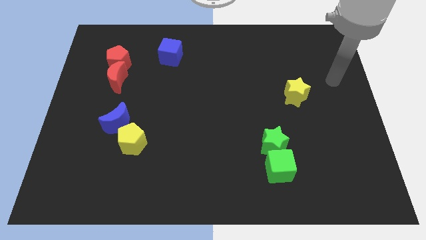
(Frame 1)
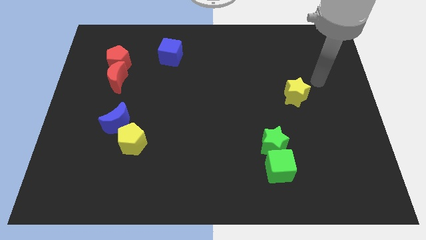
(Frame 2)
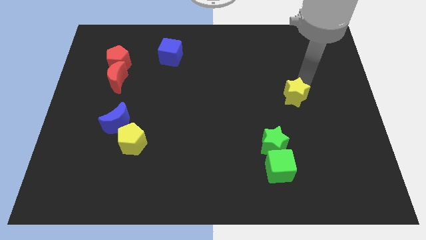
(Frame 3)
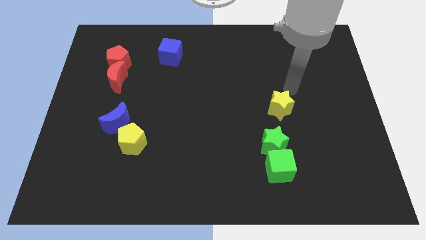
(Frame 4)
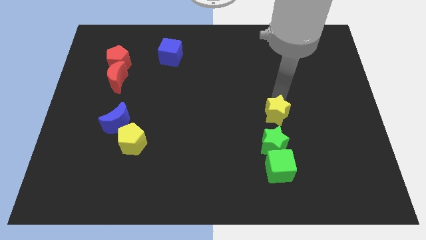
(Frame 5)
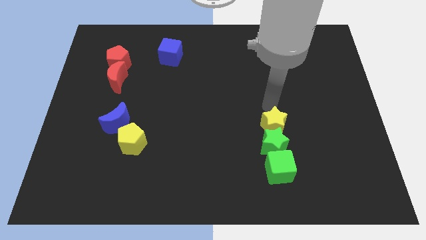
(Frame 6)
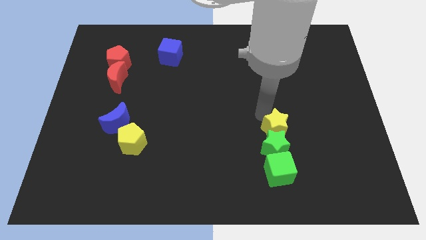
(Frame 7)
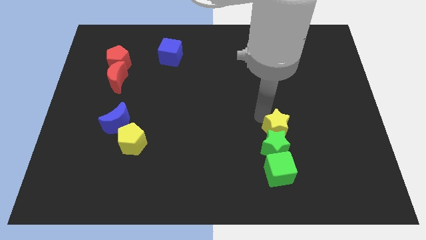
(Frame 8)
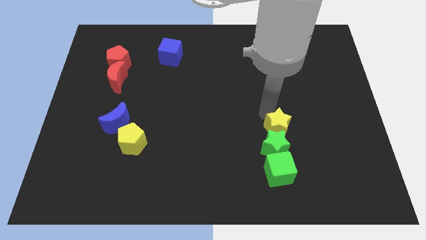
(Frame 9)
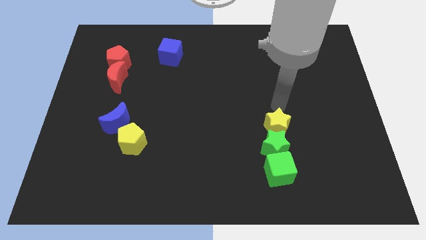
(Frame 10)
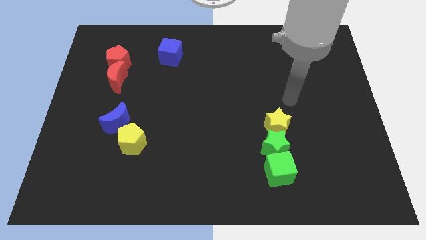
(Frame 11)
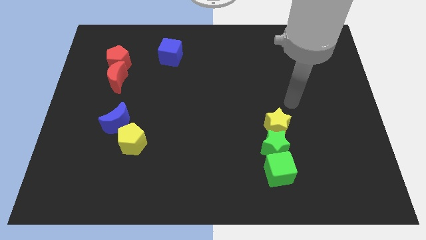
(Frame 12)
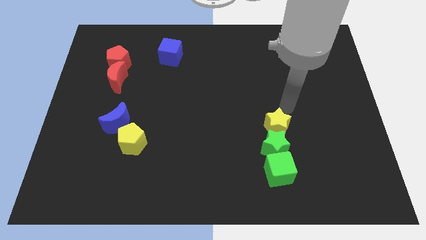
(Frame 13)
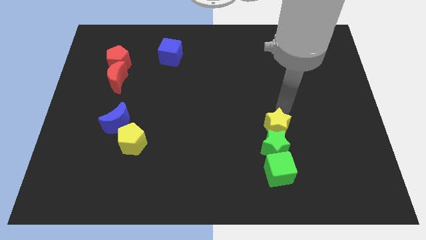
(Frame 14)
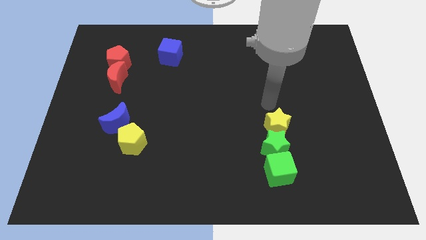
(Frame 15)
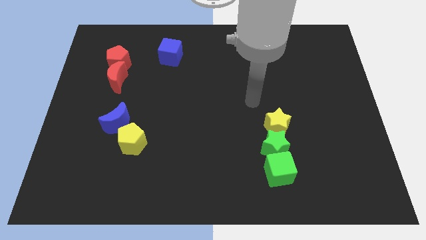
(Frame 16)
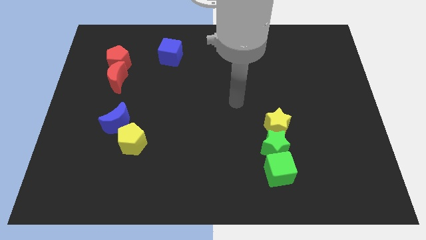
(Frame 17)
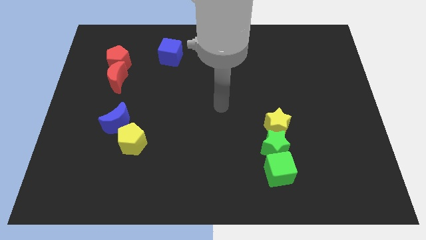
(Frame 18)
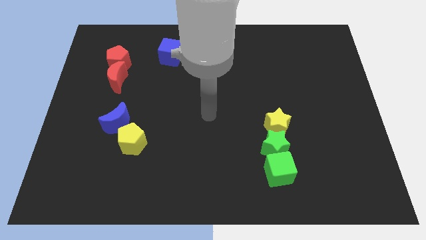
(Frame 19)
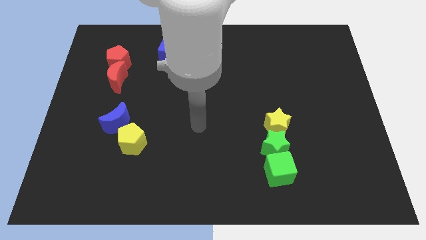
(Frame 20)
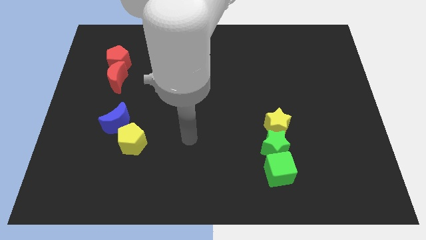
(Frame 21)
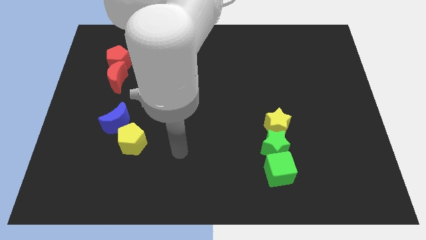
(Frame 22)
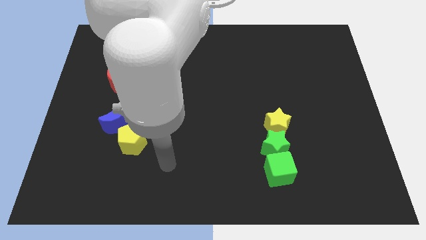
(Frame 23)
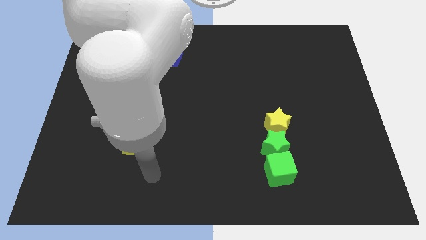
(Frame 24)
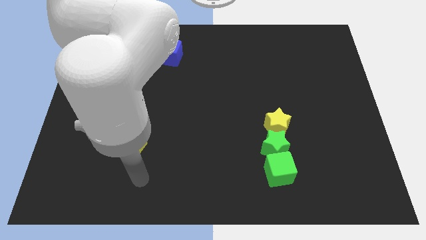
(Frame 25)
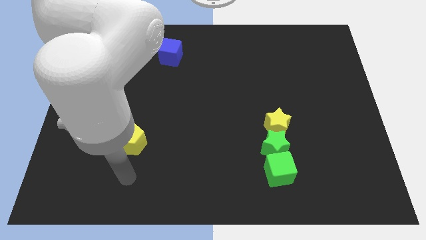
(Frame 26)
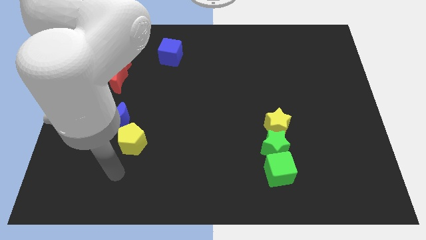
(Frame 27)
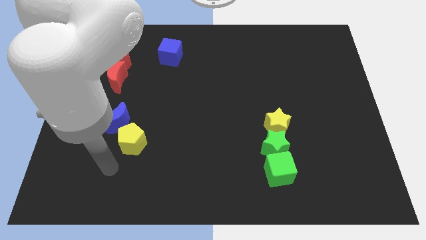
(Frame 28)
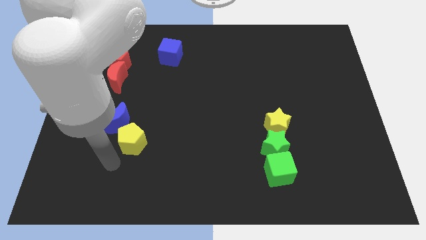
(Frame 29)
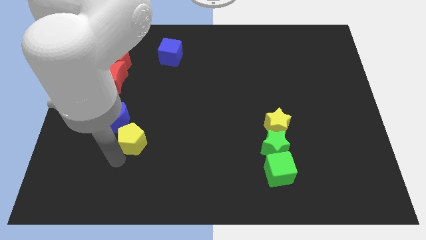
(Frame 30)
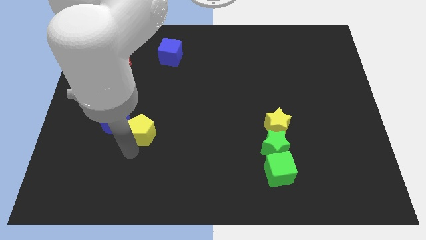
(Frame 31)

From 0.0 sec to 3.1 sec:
place the arm near the yellow pentagon

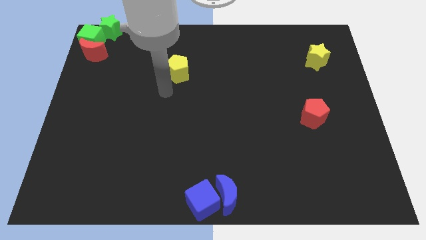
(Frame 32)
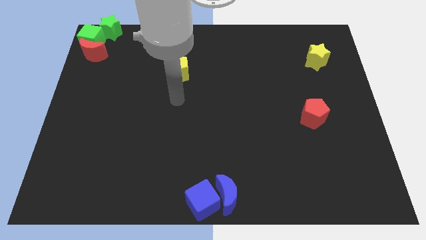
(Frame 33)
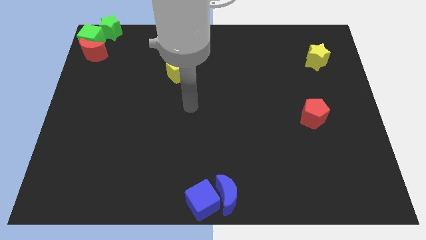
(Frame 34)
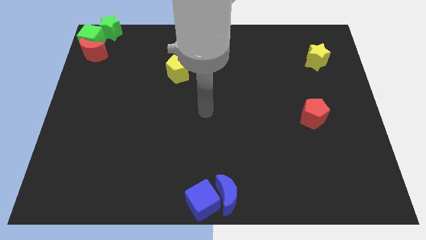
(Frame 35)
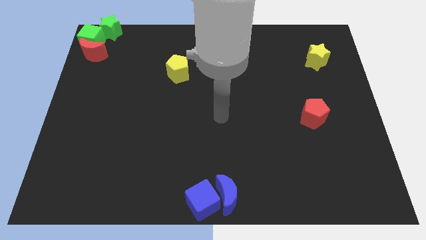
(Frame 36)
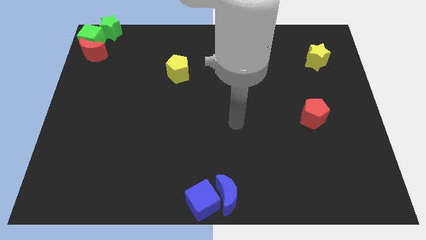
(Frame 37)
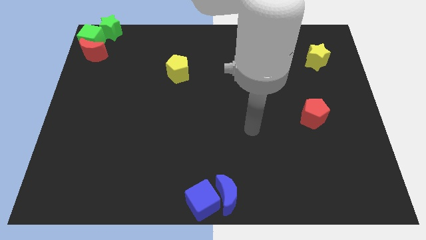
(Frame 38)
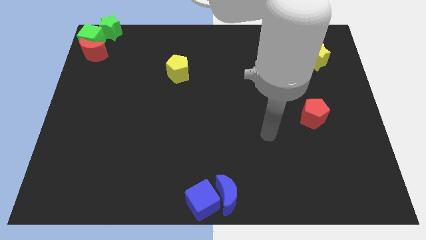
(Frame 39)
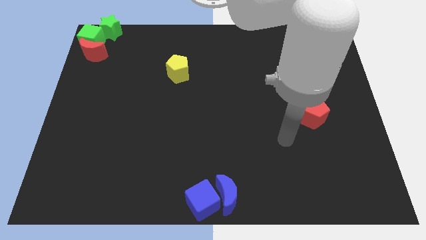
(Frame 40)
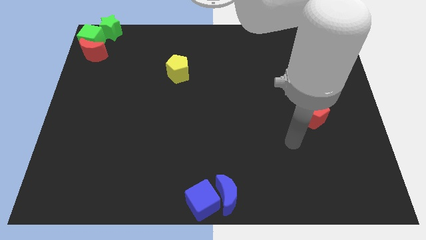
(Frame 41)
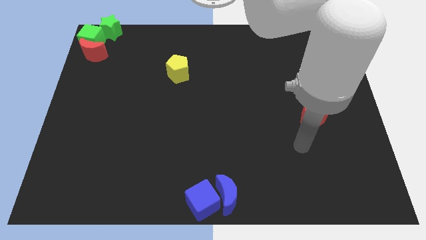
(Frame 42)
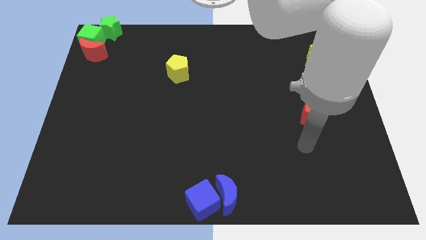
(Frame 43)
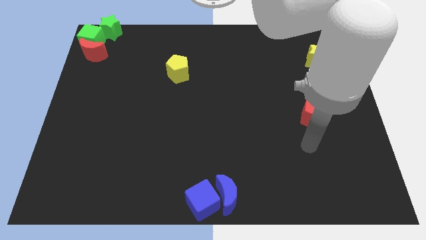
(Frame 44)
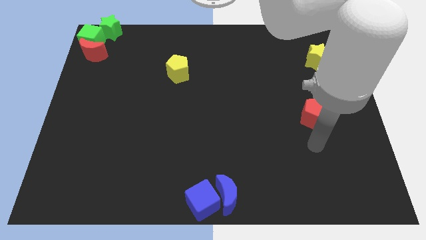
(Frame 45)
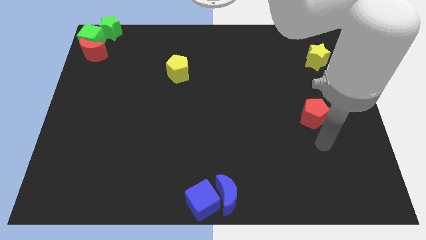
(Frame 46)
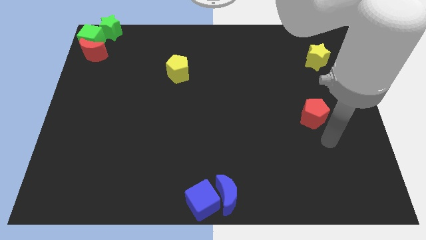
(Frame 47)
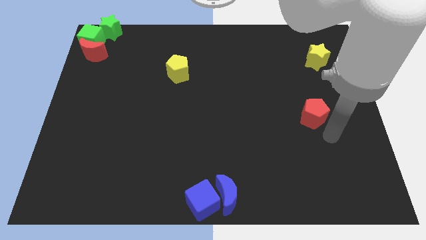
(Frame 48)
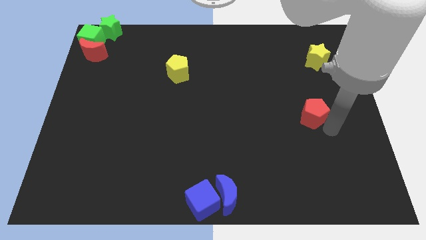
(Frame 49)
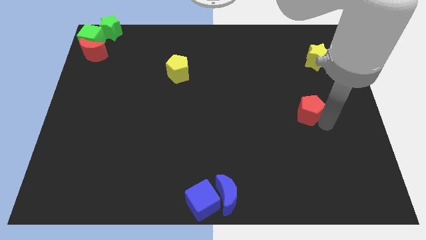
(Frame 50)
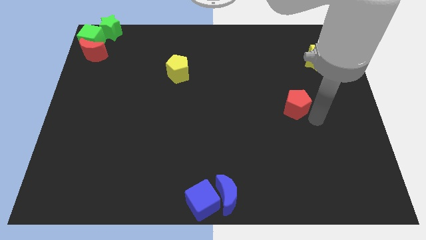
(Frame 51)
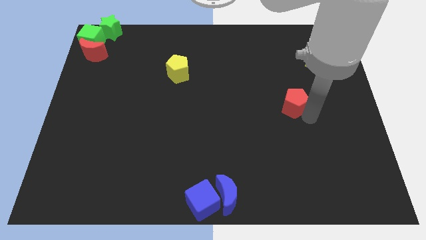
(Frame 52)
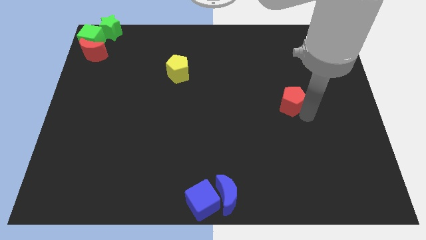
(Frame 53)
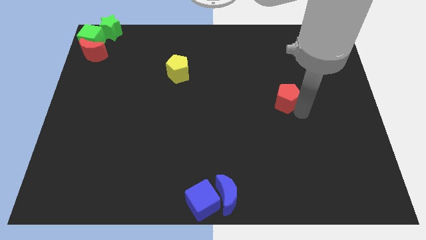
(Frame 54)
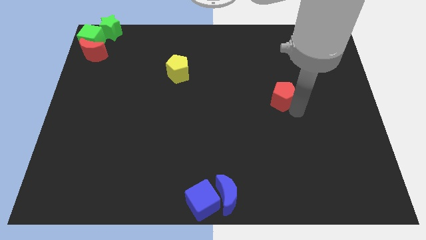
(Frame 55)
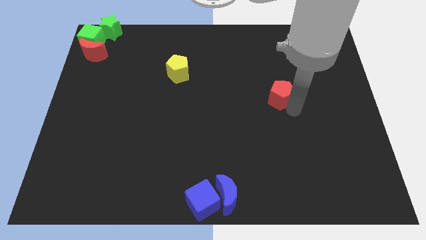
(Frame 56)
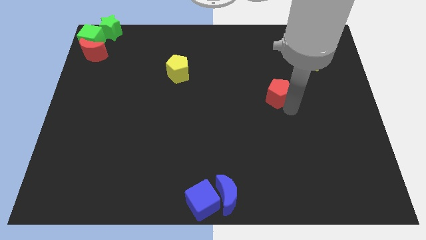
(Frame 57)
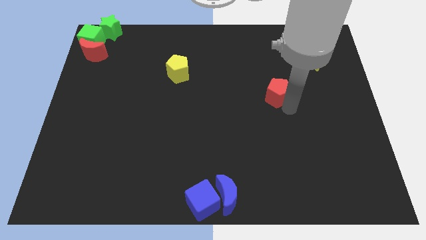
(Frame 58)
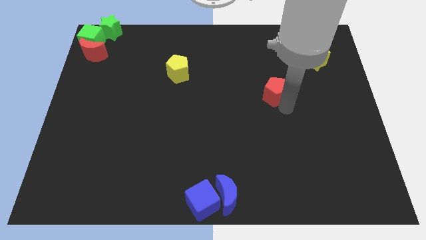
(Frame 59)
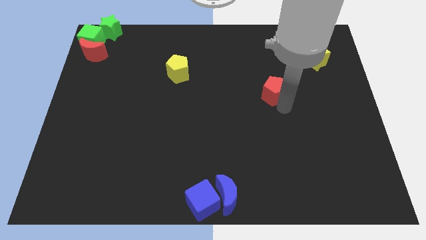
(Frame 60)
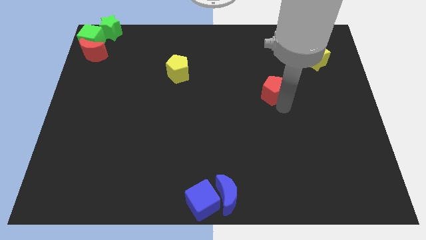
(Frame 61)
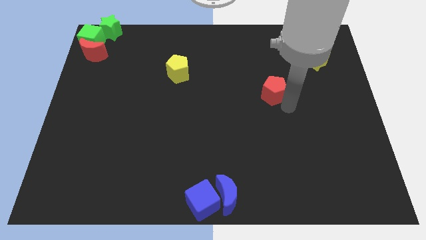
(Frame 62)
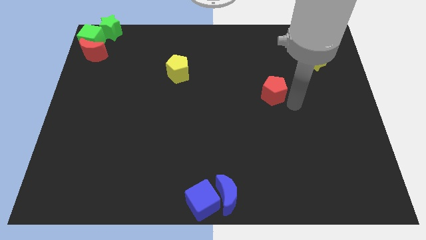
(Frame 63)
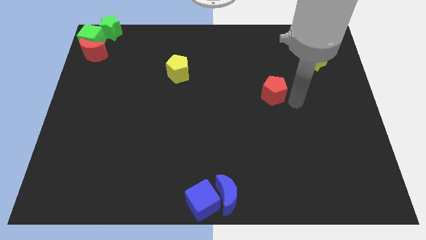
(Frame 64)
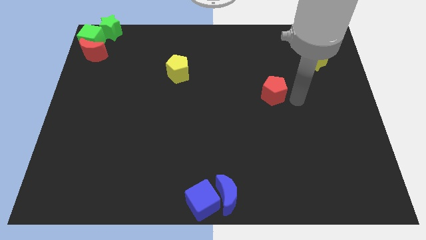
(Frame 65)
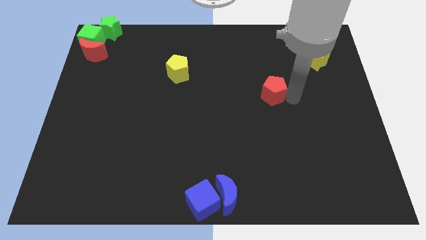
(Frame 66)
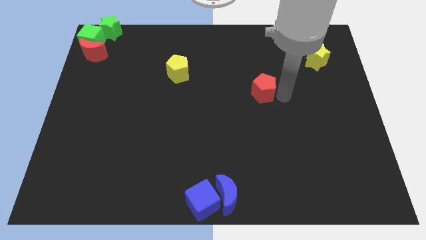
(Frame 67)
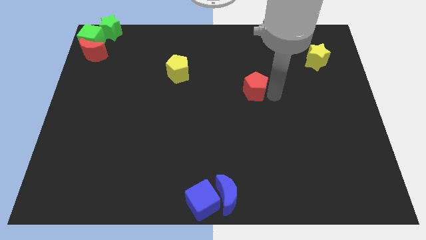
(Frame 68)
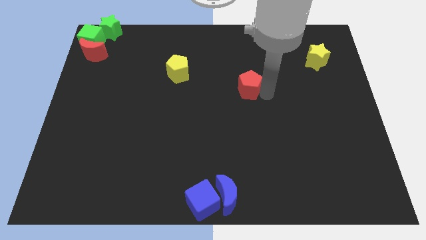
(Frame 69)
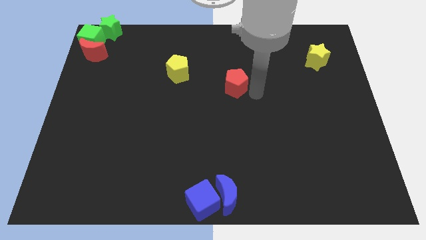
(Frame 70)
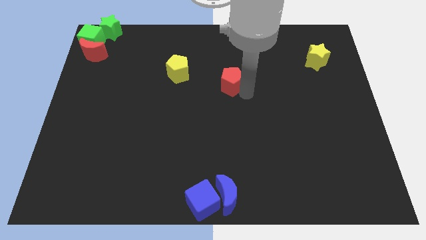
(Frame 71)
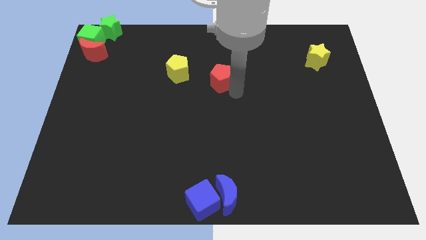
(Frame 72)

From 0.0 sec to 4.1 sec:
move red pentagon towards the right of yellow pentagon

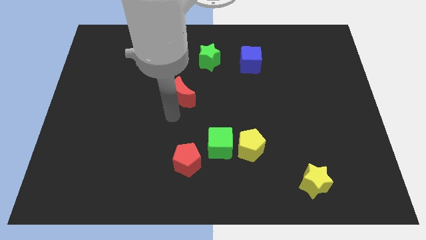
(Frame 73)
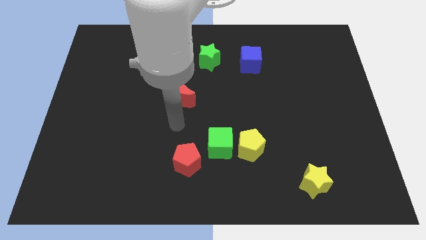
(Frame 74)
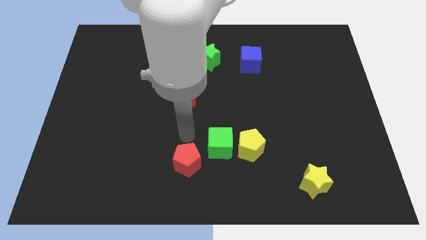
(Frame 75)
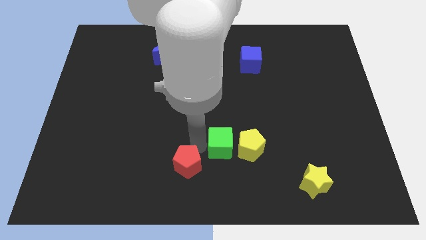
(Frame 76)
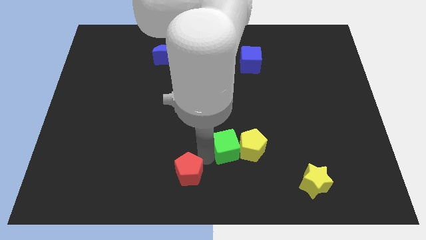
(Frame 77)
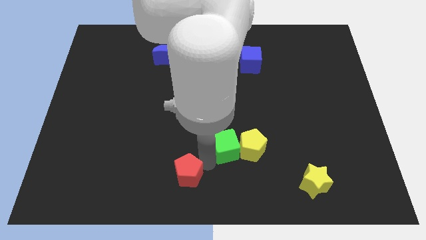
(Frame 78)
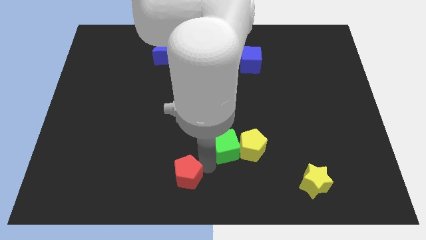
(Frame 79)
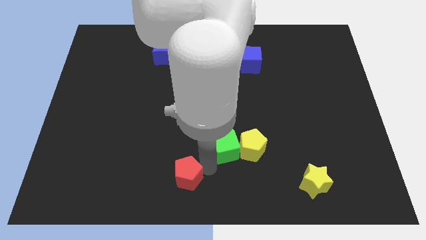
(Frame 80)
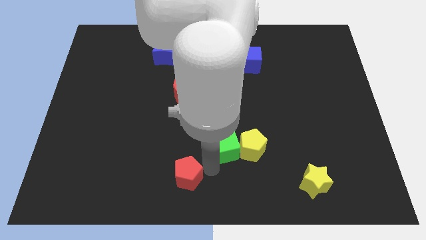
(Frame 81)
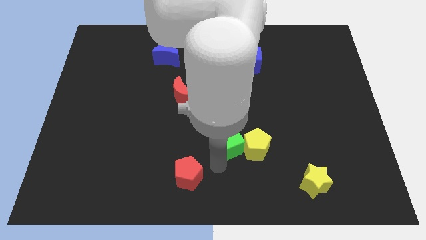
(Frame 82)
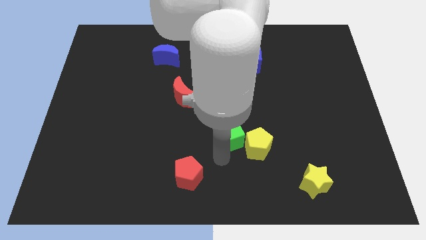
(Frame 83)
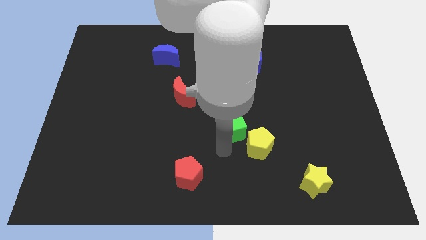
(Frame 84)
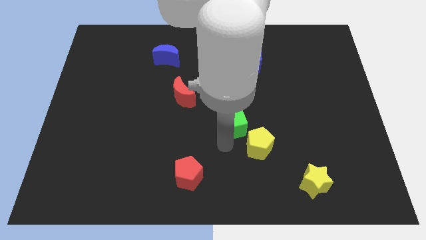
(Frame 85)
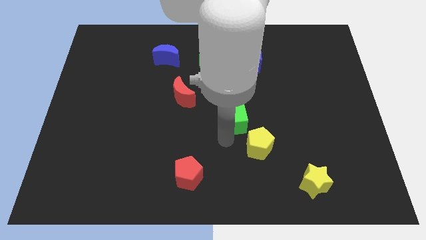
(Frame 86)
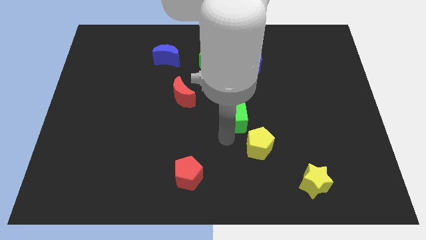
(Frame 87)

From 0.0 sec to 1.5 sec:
separate red pentagon and green cube

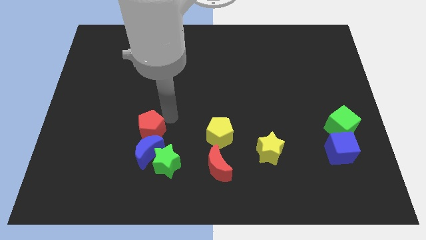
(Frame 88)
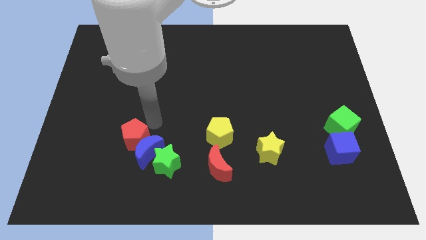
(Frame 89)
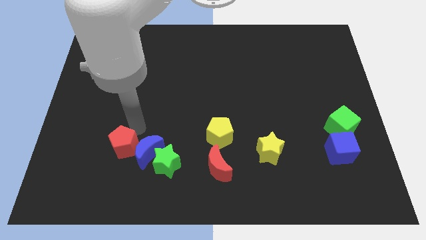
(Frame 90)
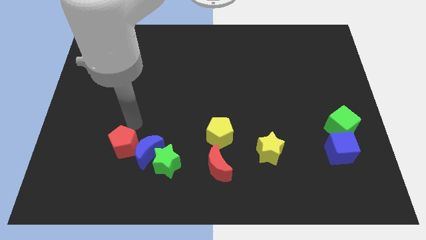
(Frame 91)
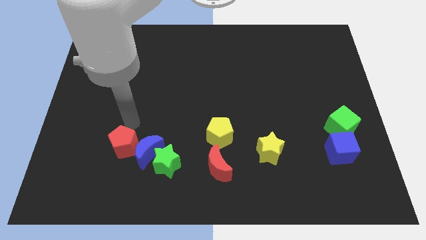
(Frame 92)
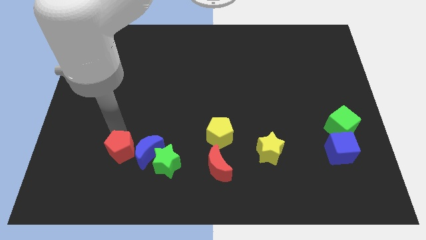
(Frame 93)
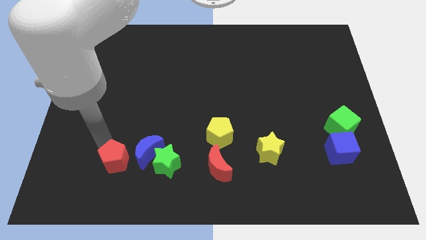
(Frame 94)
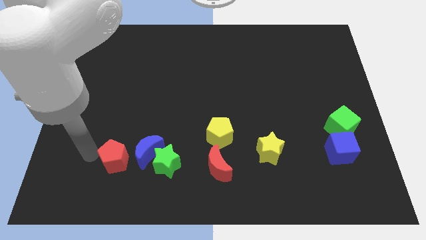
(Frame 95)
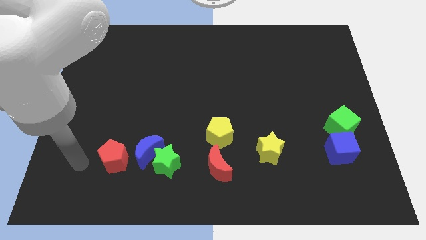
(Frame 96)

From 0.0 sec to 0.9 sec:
move the red pentagon left to the blue crescent
